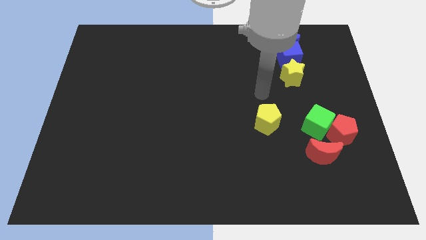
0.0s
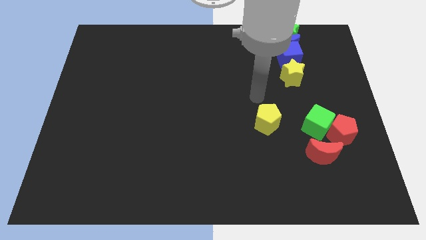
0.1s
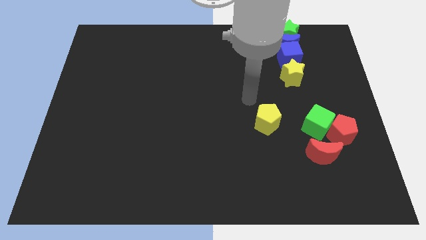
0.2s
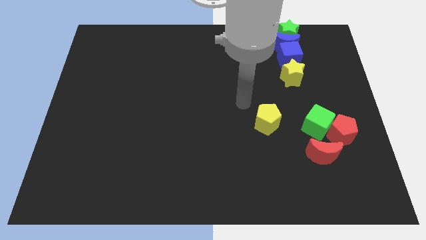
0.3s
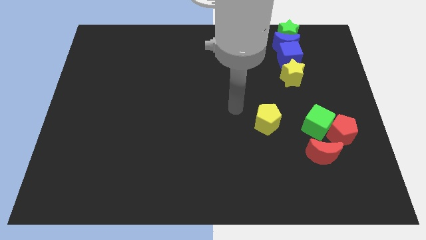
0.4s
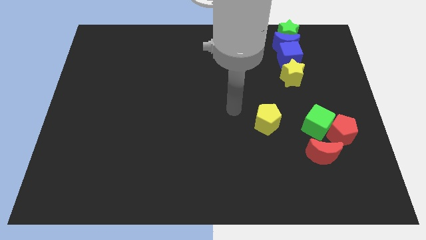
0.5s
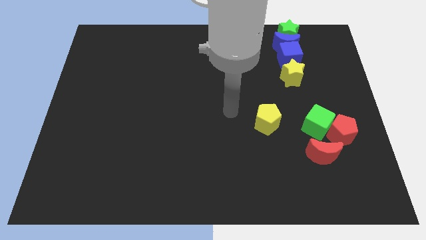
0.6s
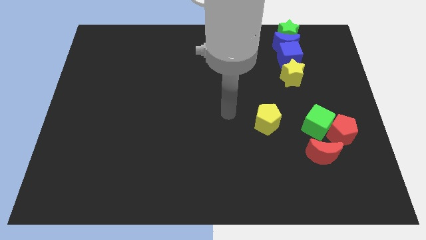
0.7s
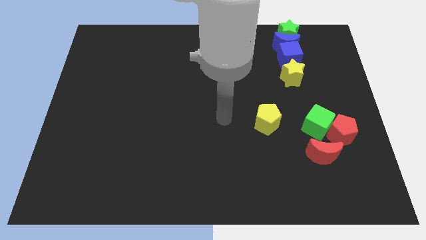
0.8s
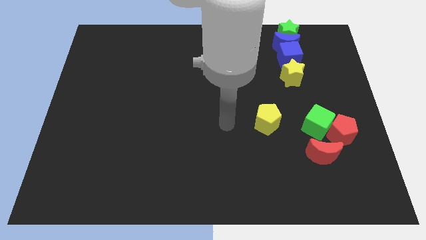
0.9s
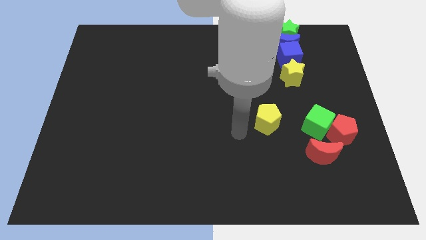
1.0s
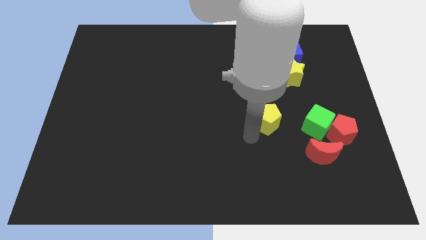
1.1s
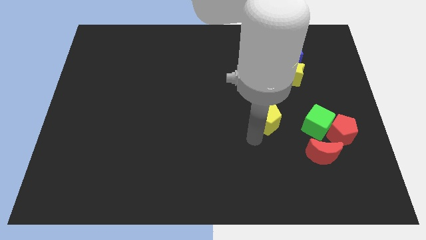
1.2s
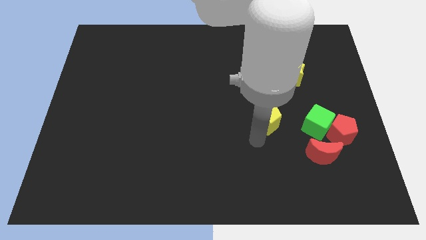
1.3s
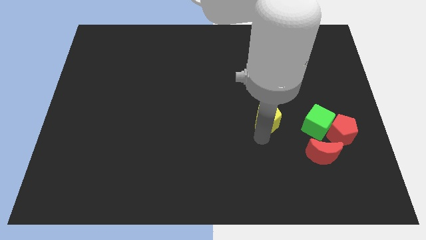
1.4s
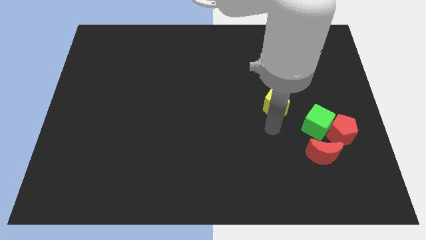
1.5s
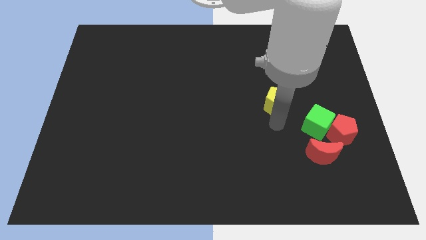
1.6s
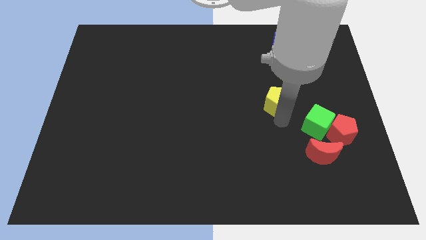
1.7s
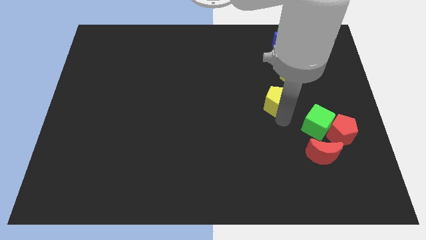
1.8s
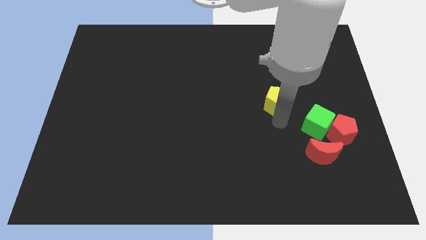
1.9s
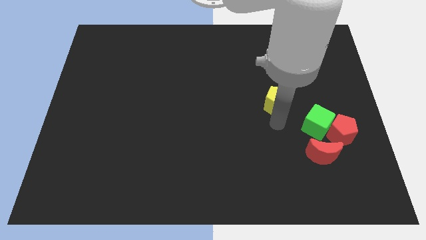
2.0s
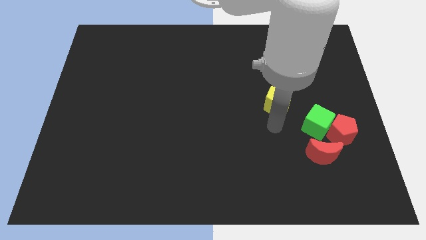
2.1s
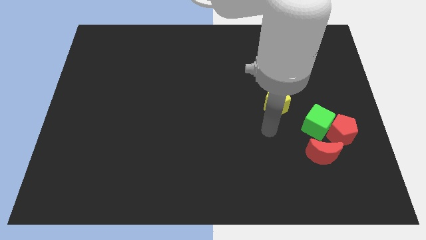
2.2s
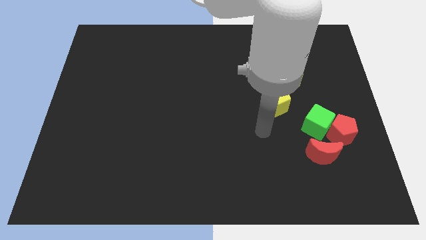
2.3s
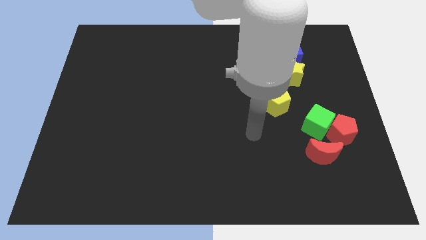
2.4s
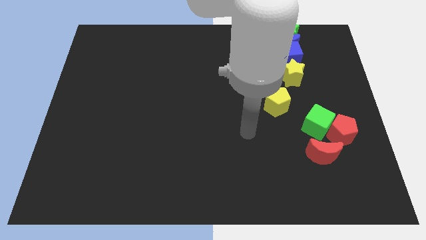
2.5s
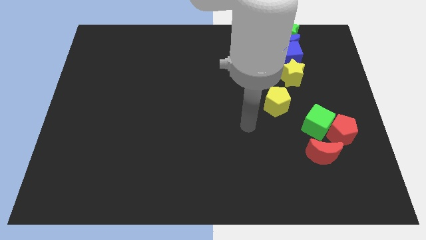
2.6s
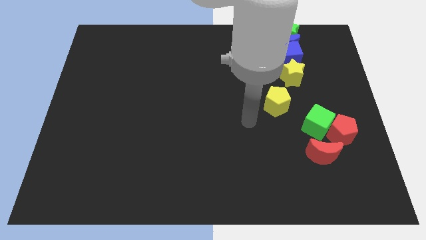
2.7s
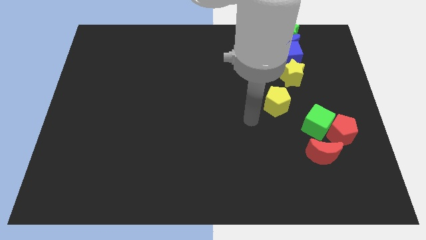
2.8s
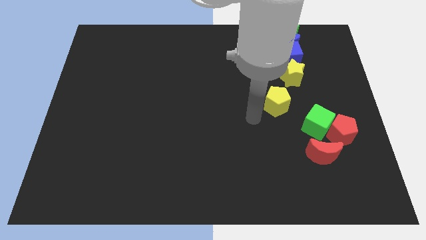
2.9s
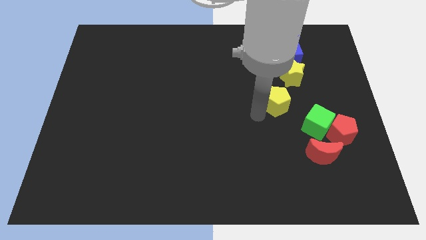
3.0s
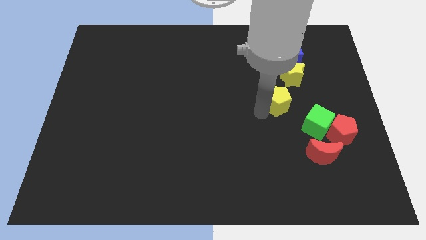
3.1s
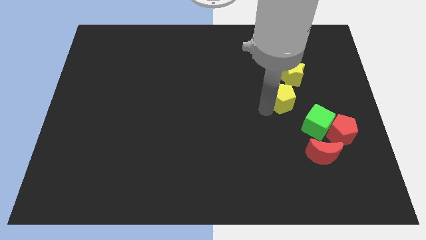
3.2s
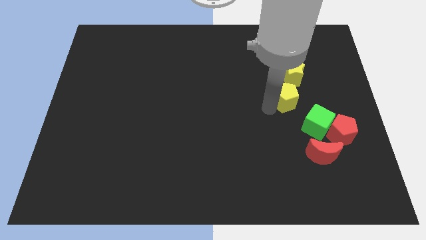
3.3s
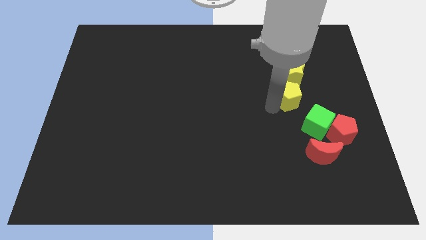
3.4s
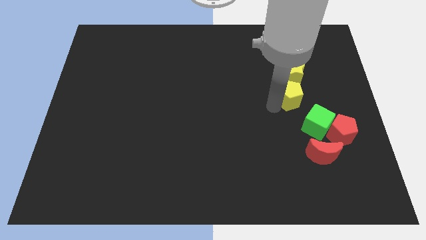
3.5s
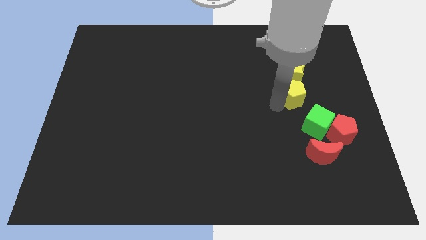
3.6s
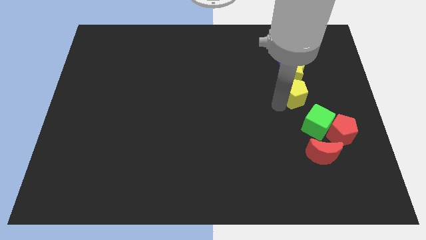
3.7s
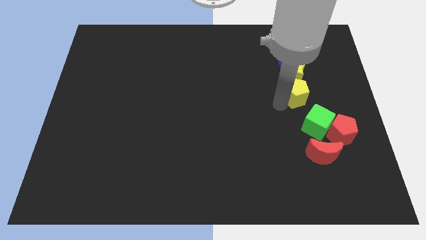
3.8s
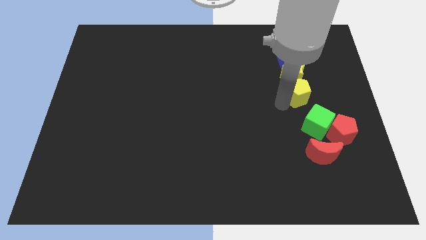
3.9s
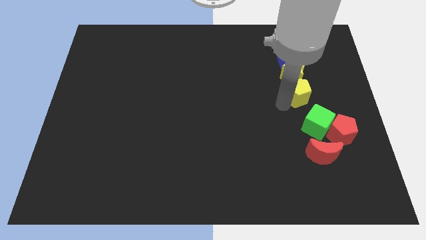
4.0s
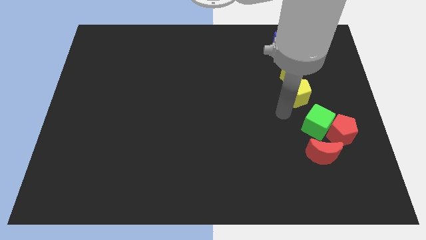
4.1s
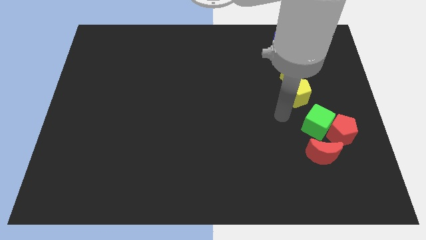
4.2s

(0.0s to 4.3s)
push the yellow pentagon bottom to the yellow star

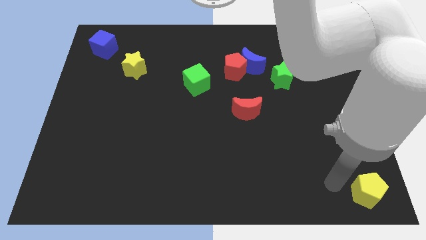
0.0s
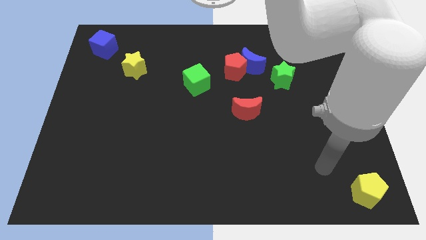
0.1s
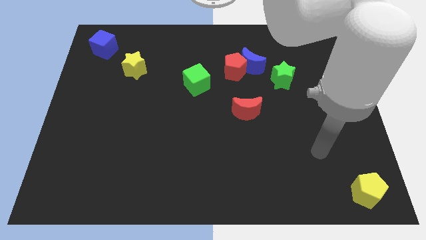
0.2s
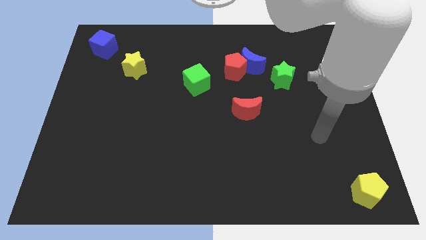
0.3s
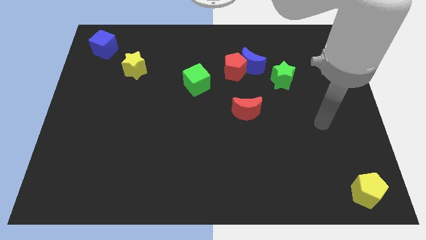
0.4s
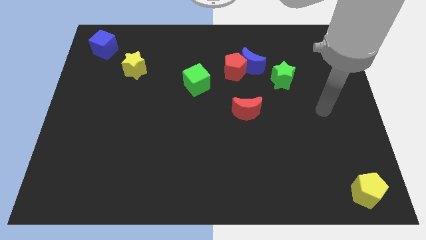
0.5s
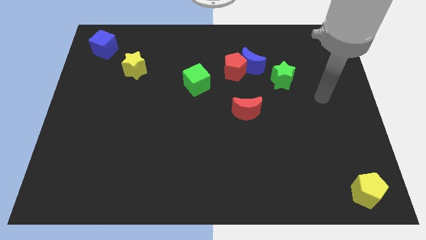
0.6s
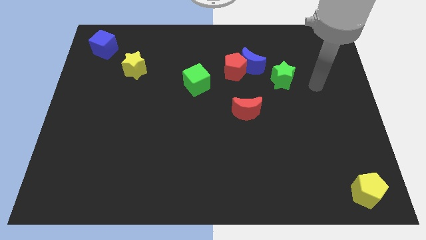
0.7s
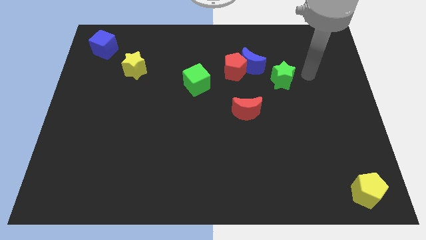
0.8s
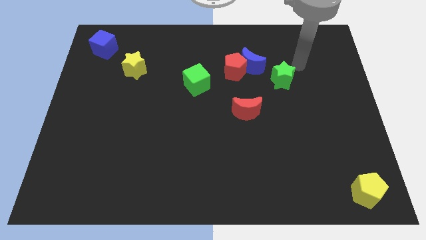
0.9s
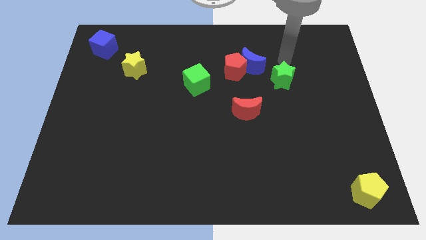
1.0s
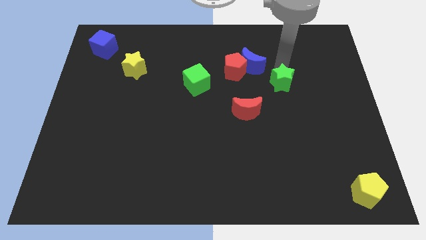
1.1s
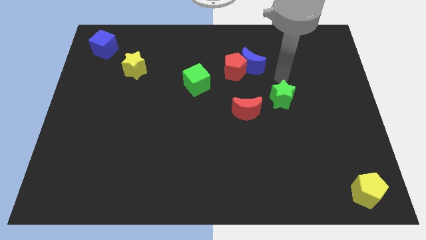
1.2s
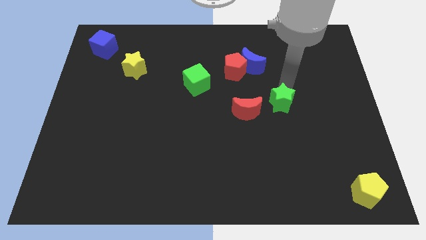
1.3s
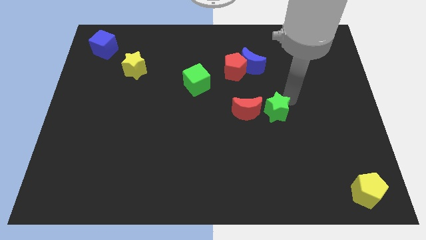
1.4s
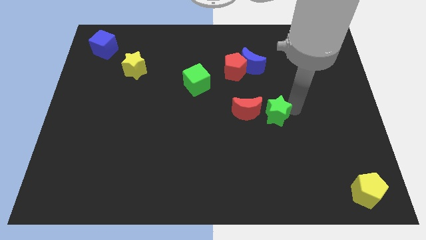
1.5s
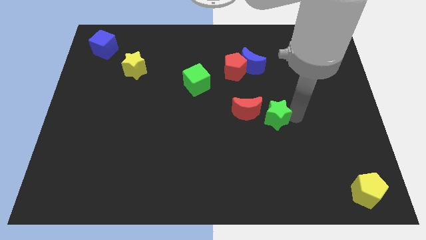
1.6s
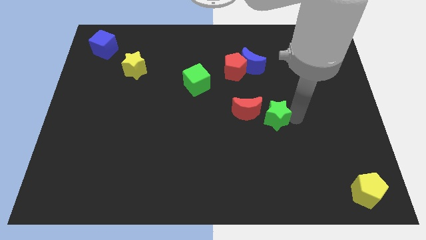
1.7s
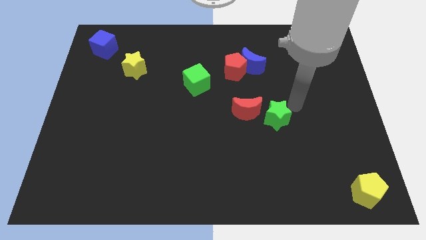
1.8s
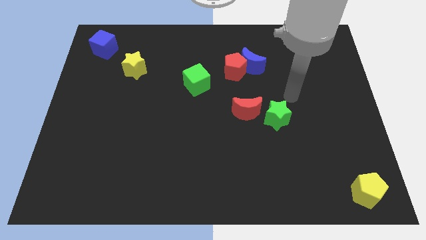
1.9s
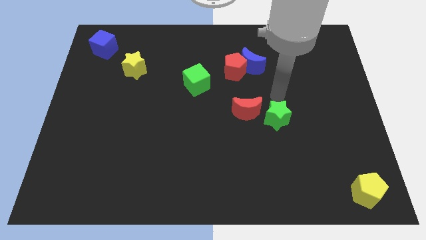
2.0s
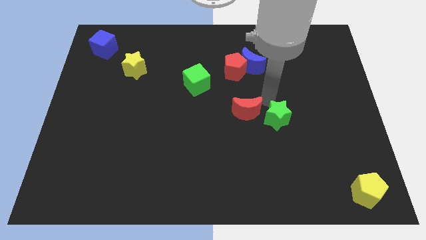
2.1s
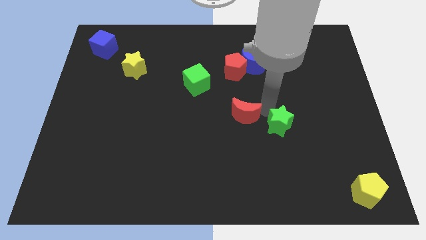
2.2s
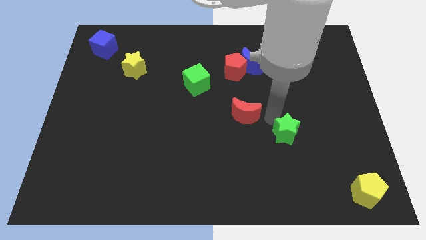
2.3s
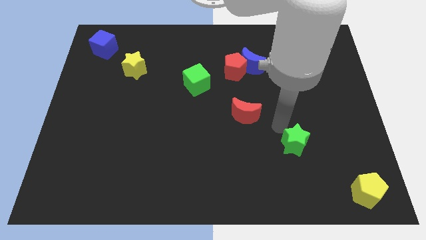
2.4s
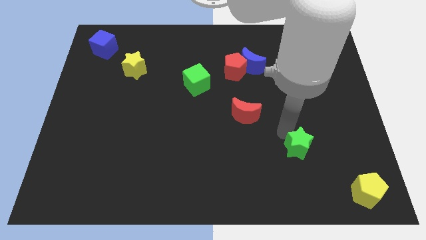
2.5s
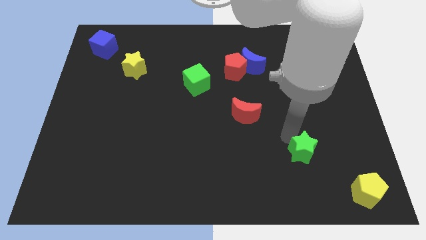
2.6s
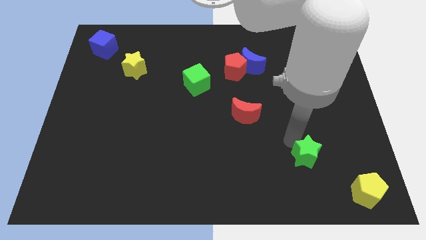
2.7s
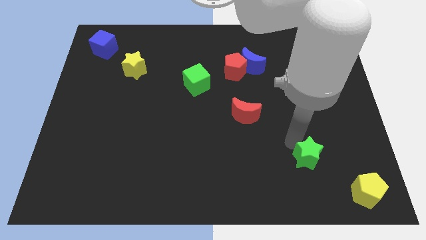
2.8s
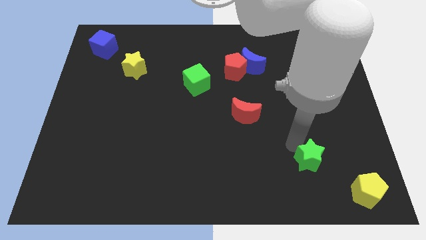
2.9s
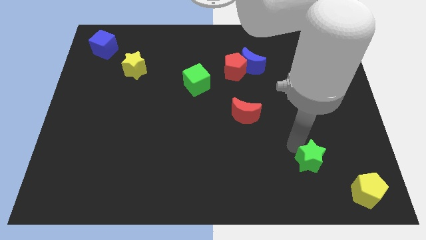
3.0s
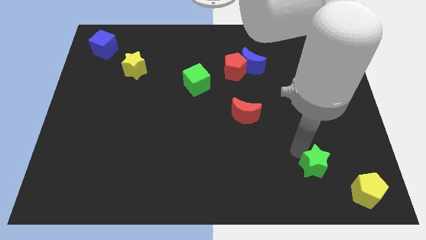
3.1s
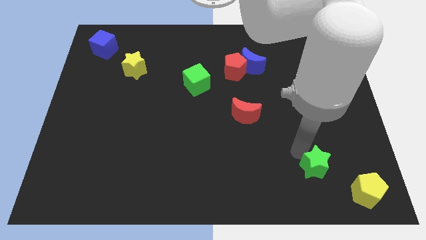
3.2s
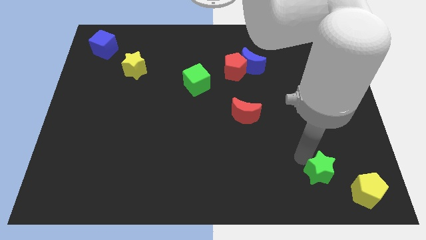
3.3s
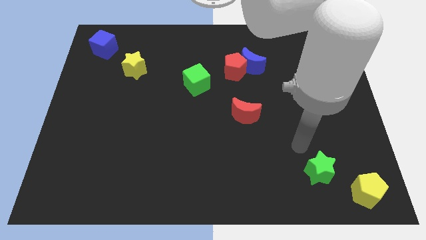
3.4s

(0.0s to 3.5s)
drag the green star towards the left side of the yellow pentagon

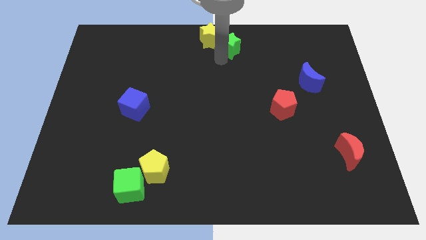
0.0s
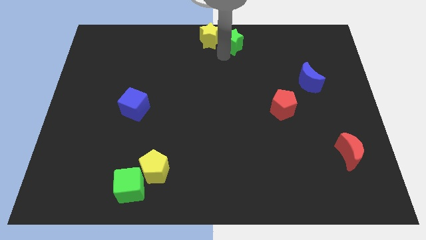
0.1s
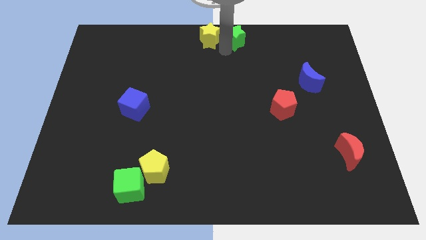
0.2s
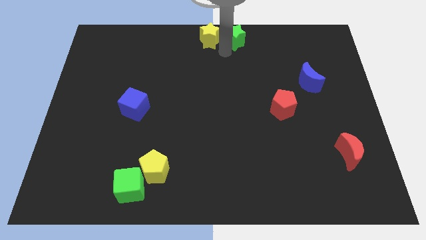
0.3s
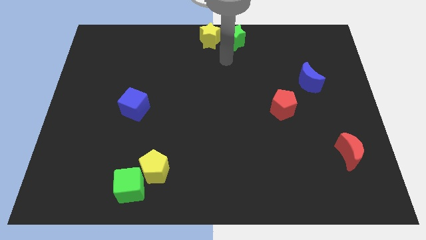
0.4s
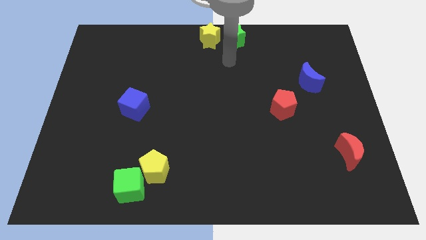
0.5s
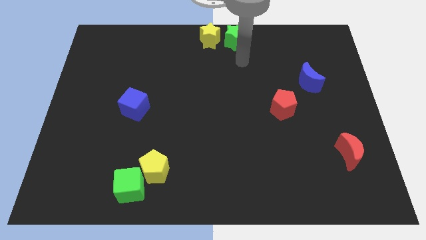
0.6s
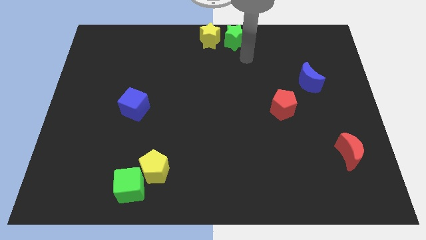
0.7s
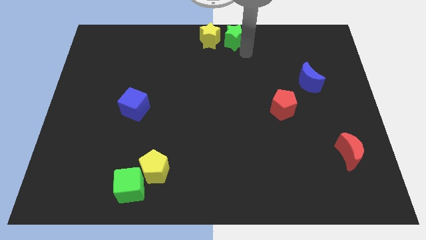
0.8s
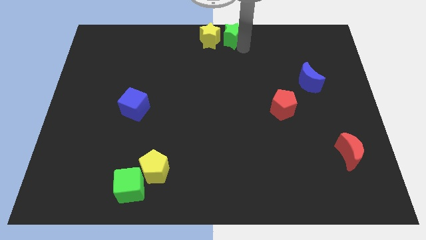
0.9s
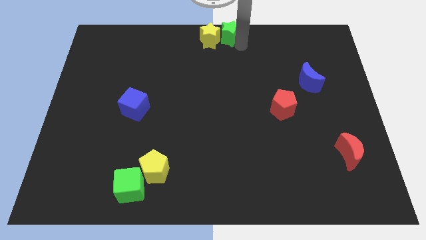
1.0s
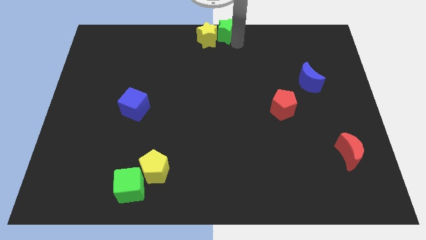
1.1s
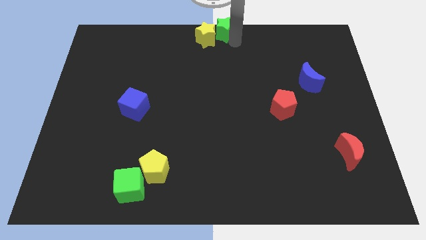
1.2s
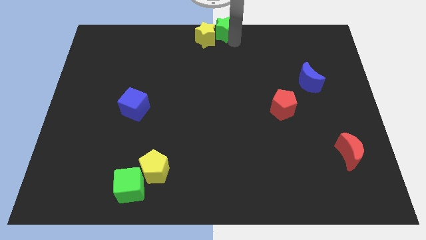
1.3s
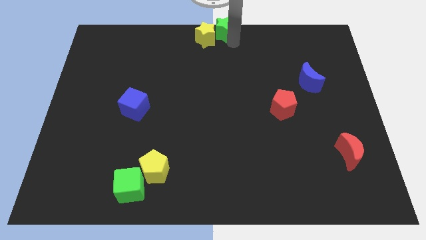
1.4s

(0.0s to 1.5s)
push the green star at the top center
